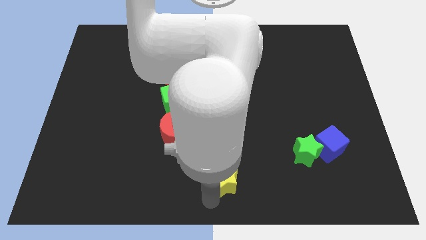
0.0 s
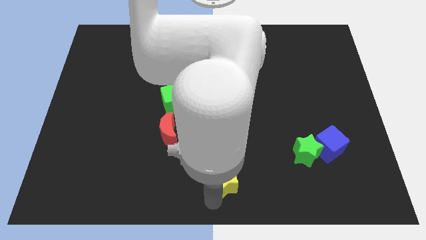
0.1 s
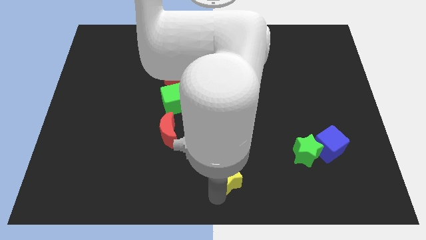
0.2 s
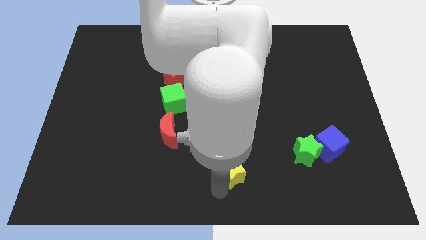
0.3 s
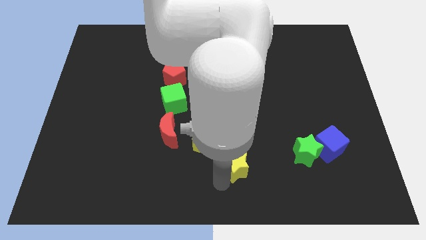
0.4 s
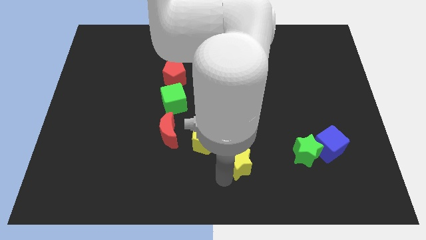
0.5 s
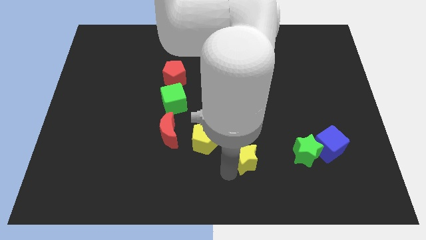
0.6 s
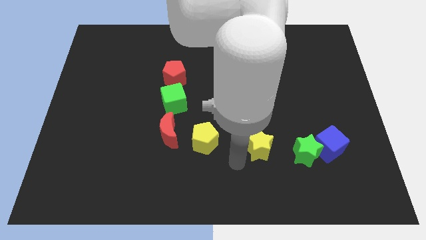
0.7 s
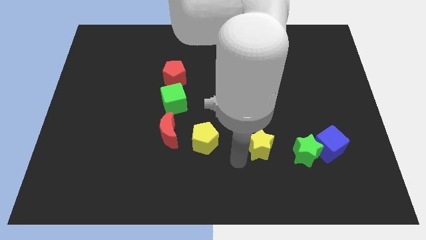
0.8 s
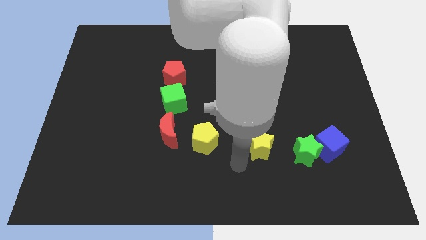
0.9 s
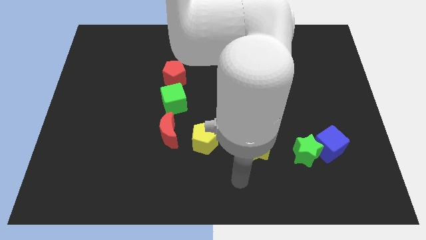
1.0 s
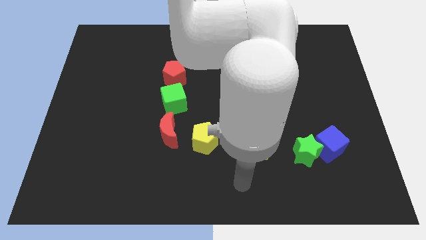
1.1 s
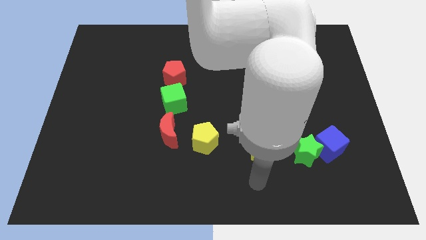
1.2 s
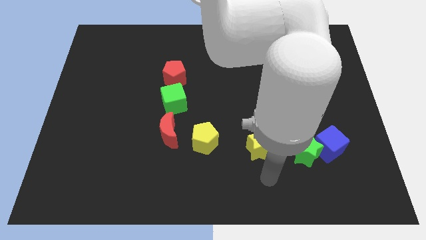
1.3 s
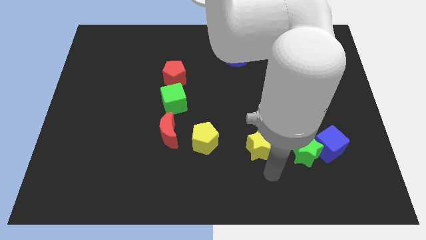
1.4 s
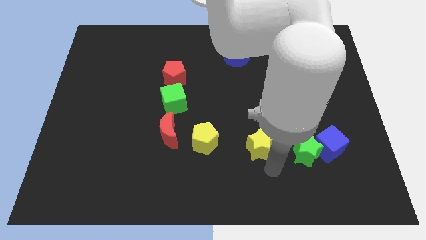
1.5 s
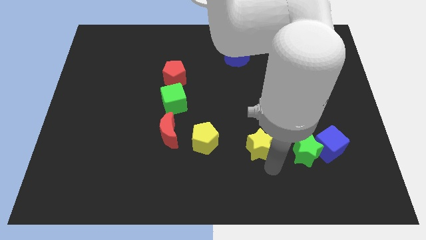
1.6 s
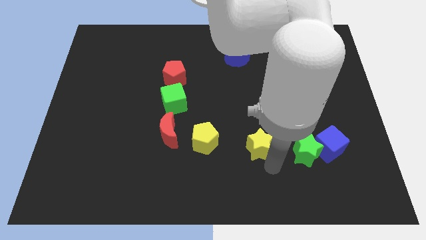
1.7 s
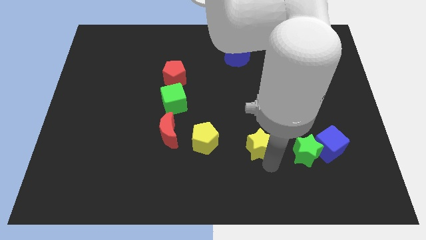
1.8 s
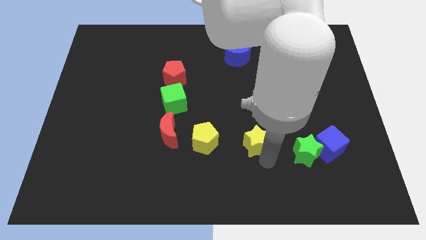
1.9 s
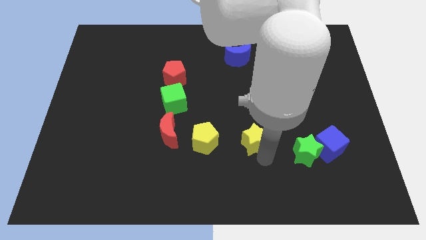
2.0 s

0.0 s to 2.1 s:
move yellow star in between yellow pentagon and green star

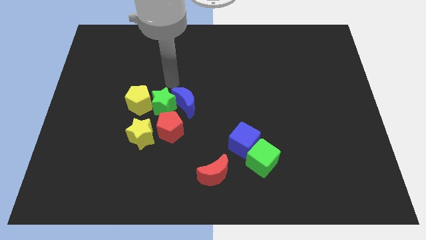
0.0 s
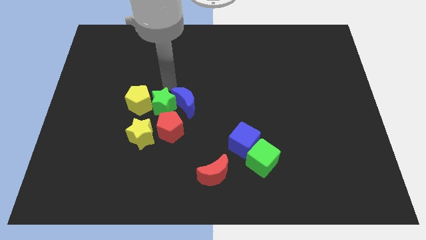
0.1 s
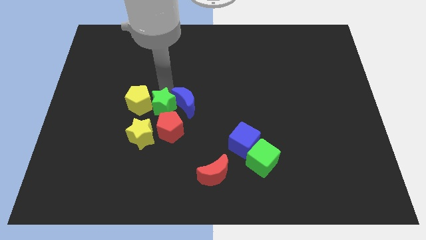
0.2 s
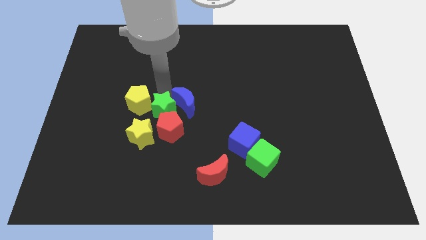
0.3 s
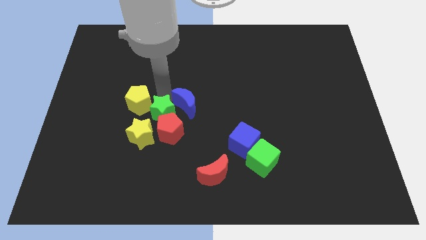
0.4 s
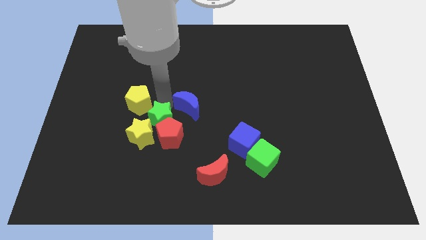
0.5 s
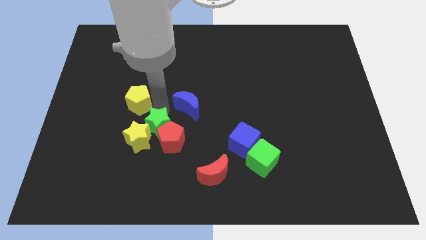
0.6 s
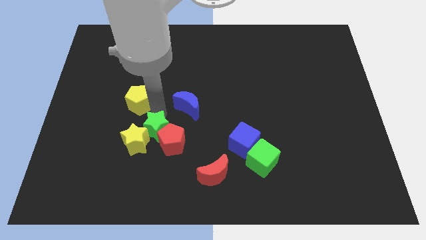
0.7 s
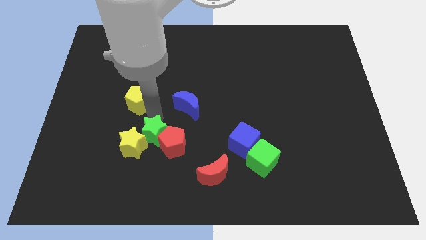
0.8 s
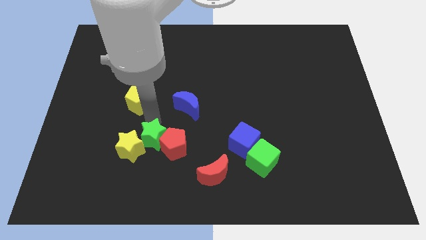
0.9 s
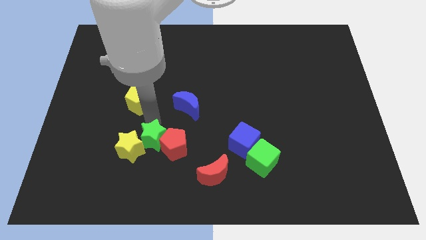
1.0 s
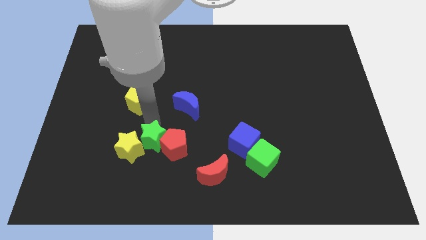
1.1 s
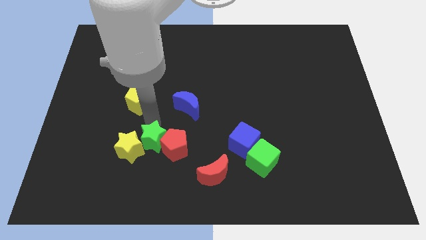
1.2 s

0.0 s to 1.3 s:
push the green star slightly towards down

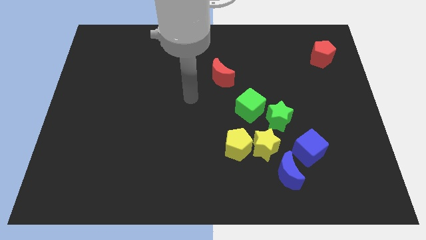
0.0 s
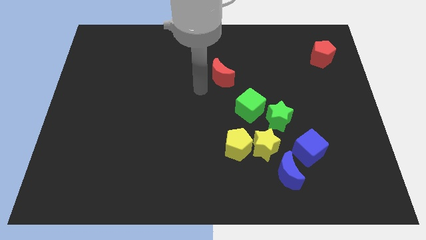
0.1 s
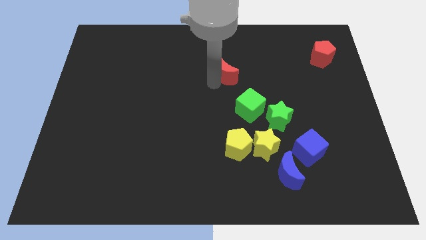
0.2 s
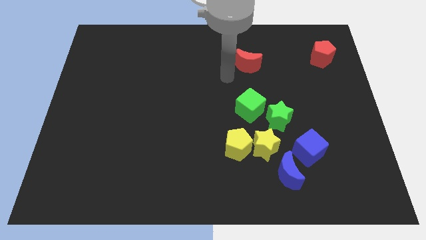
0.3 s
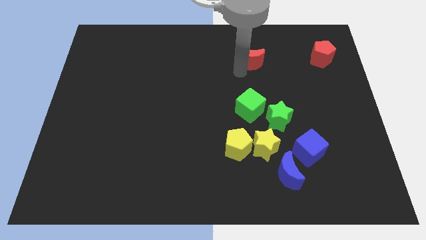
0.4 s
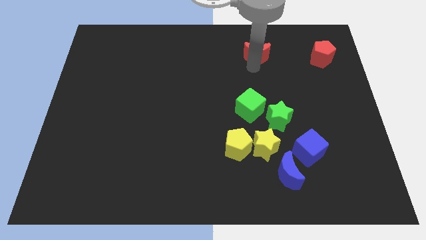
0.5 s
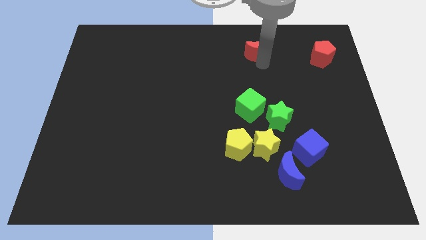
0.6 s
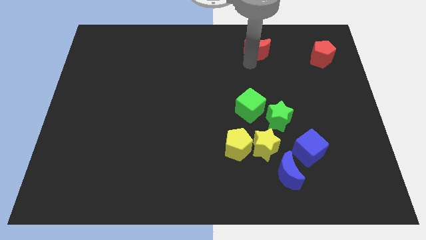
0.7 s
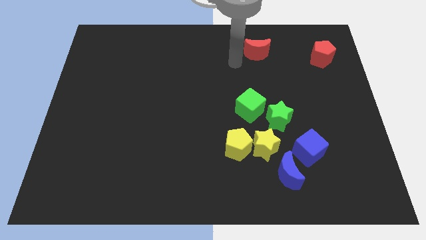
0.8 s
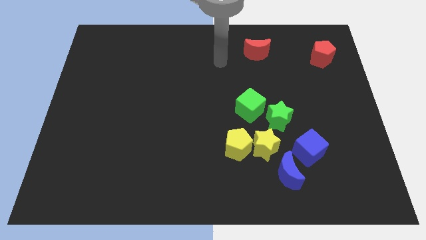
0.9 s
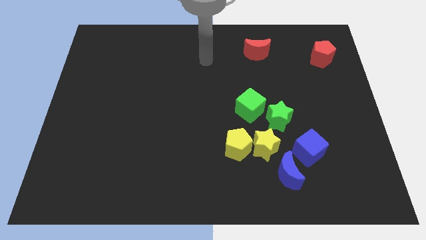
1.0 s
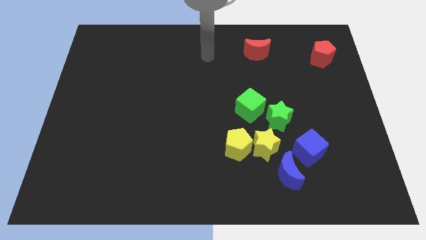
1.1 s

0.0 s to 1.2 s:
move the red crescent to the left of the red pentagon

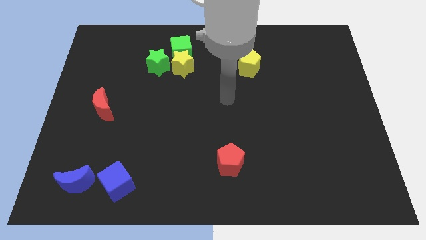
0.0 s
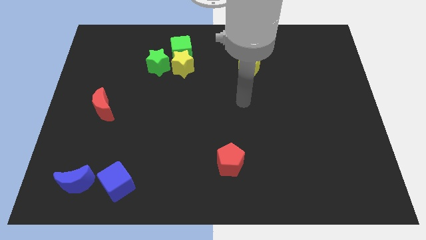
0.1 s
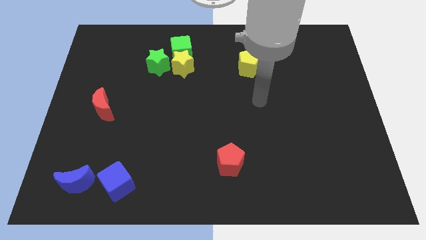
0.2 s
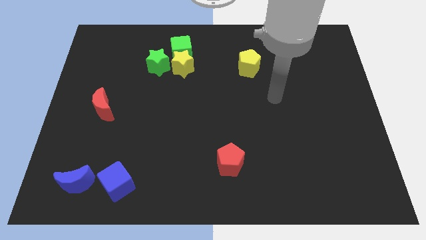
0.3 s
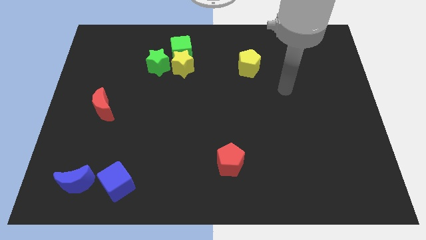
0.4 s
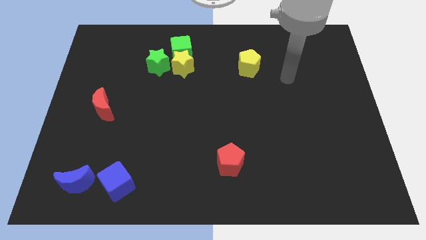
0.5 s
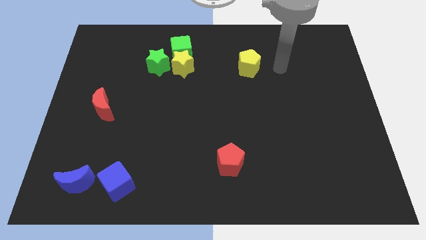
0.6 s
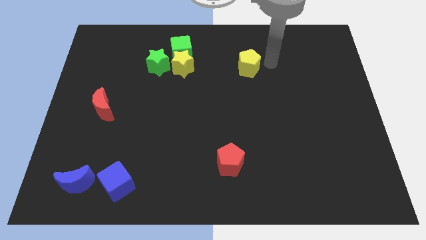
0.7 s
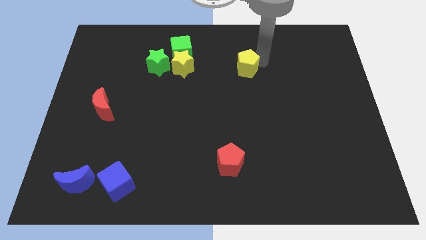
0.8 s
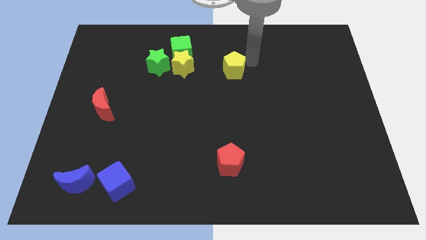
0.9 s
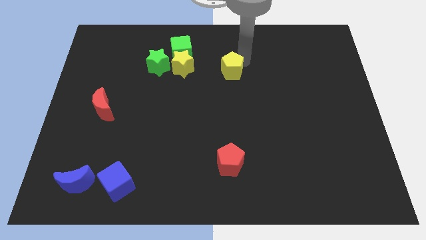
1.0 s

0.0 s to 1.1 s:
push the yellow pentagon vertically above the red pentagon

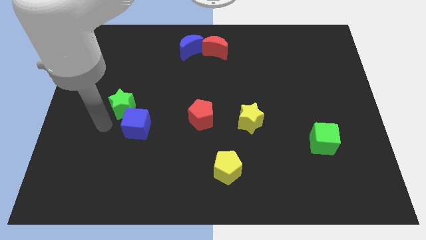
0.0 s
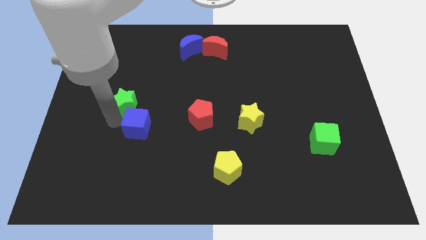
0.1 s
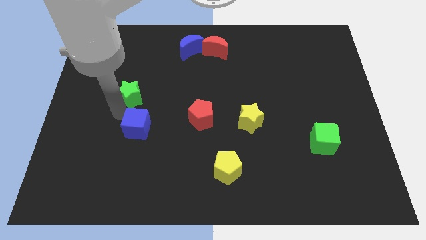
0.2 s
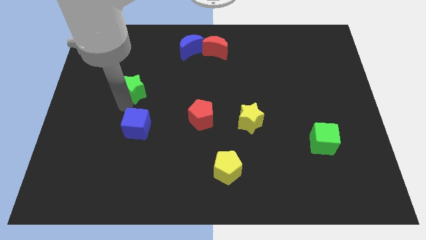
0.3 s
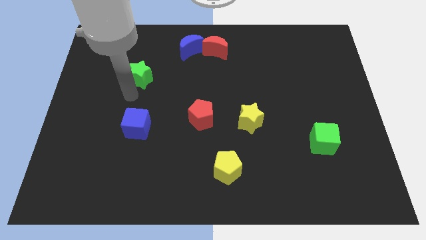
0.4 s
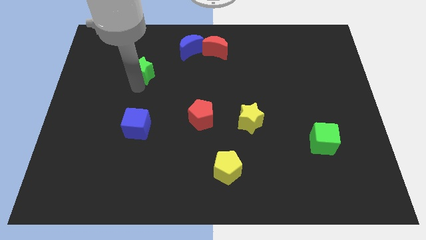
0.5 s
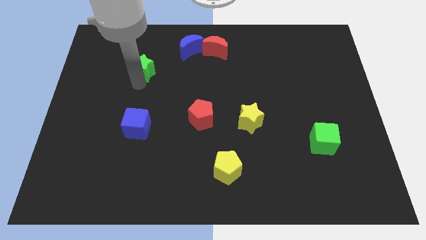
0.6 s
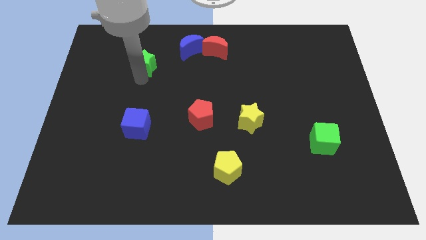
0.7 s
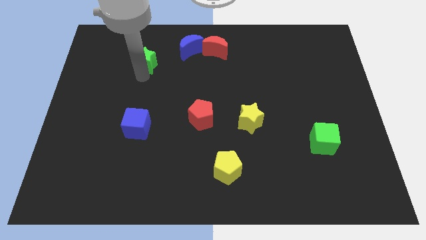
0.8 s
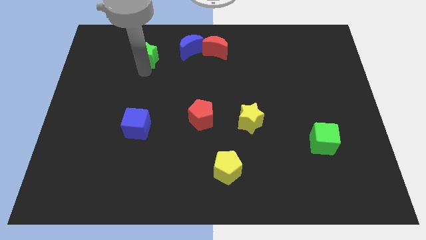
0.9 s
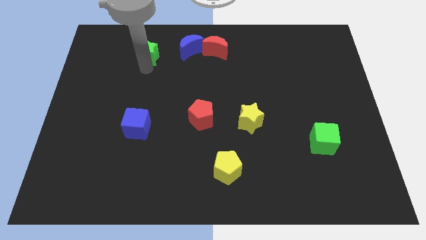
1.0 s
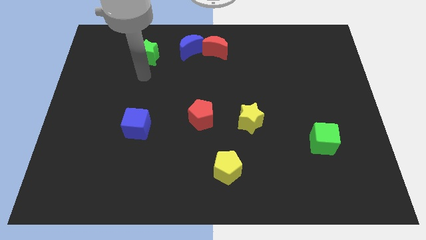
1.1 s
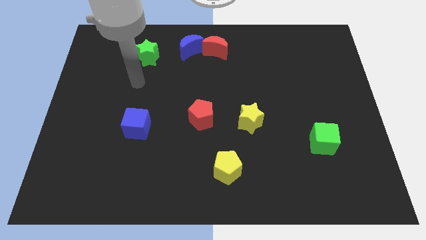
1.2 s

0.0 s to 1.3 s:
move the green star away from the blue cube

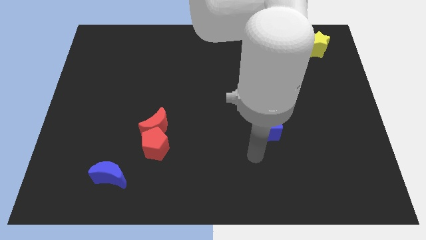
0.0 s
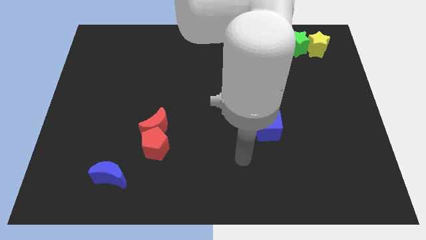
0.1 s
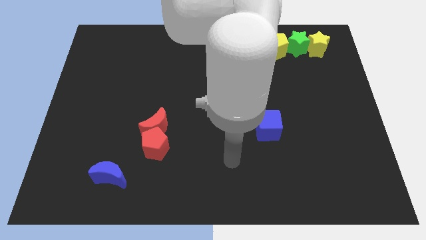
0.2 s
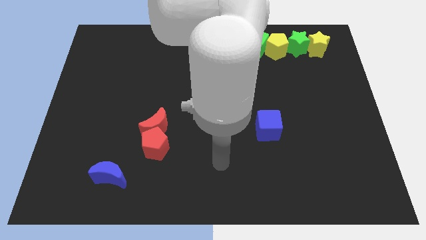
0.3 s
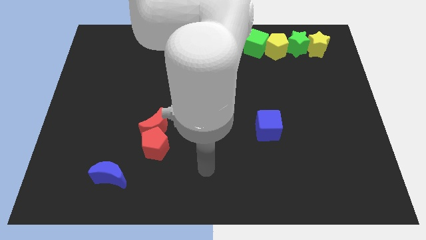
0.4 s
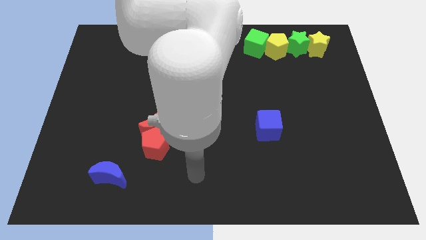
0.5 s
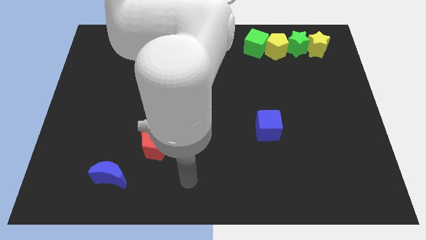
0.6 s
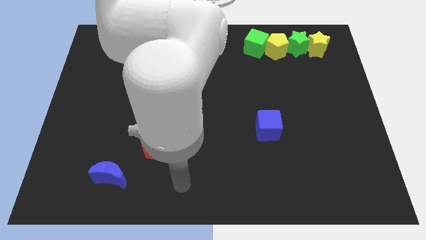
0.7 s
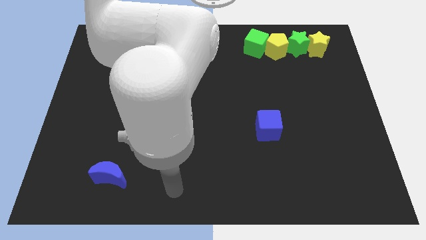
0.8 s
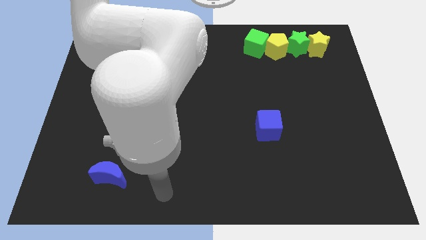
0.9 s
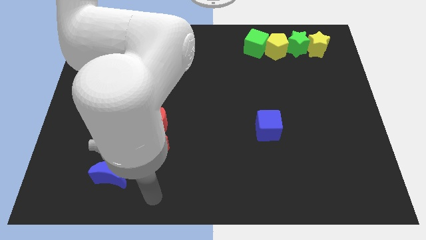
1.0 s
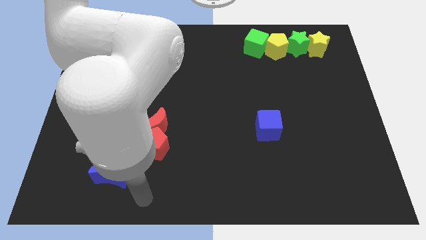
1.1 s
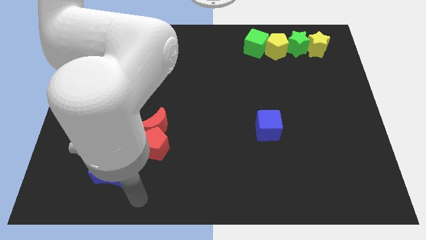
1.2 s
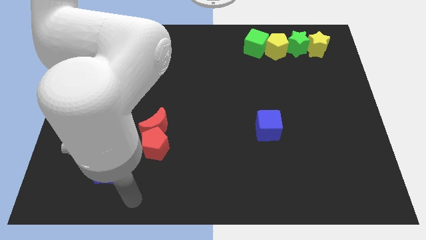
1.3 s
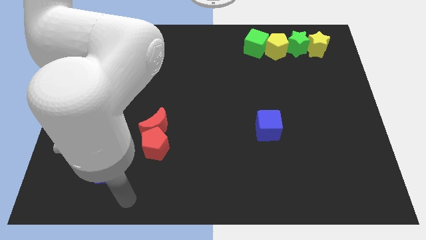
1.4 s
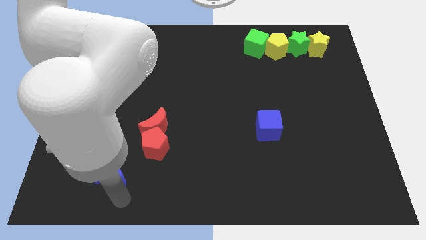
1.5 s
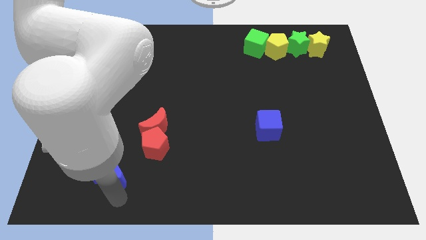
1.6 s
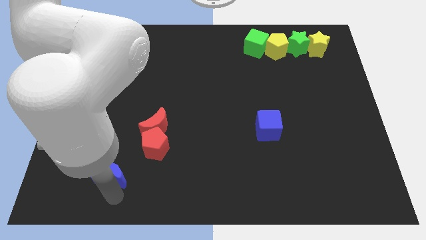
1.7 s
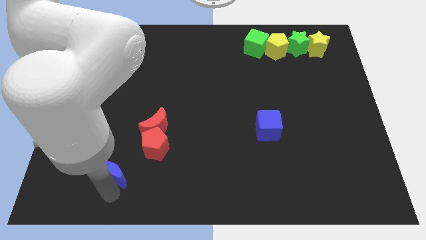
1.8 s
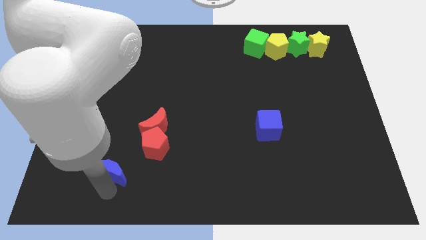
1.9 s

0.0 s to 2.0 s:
place your arm to the bottom of blue moon
